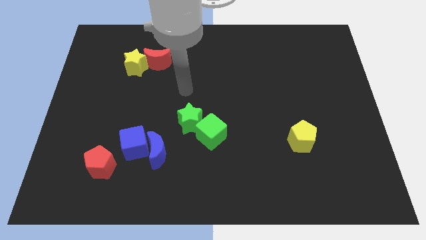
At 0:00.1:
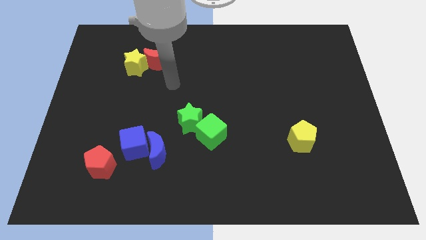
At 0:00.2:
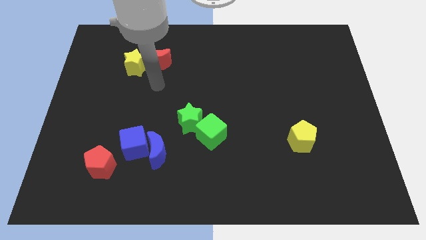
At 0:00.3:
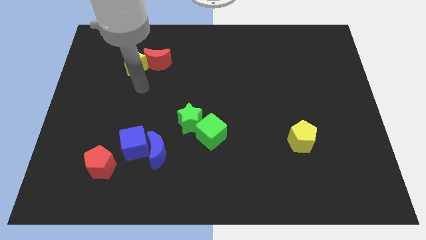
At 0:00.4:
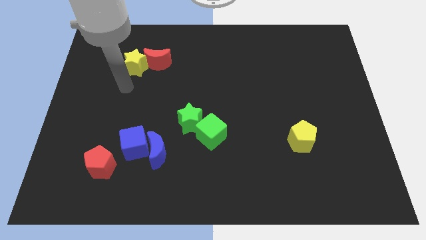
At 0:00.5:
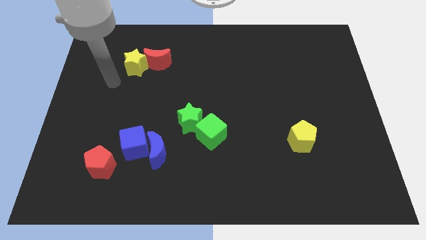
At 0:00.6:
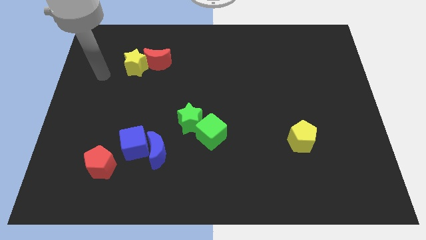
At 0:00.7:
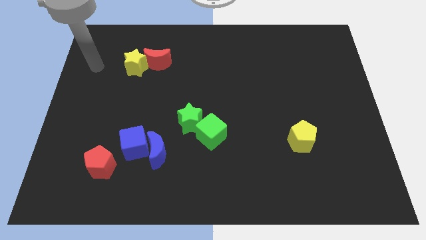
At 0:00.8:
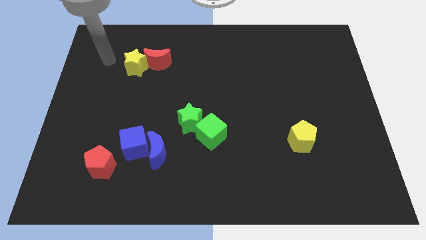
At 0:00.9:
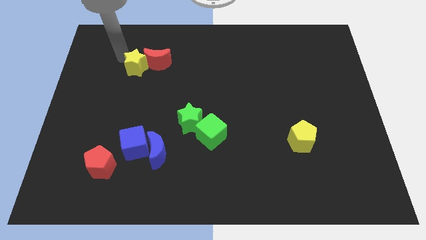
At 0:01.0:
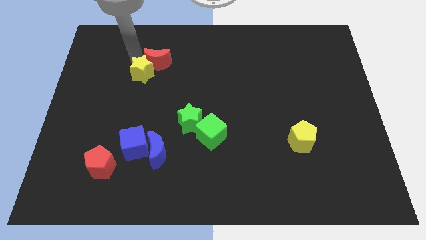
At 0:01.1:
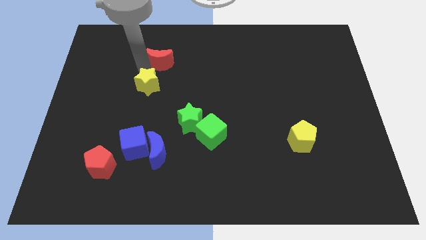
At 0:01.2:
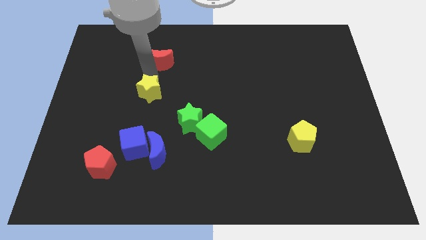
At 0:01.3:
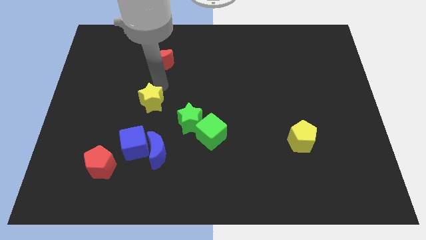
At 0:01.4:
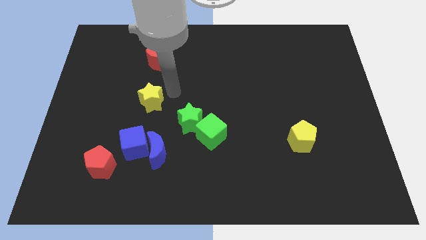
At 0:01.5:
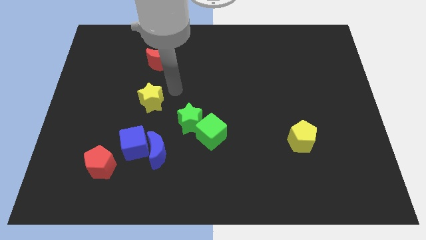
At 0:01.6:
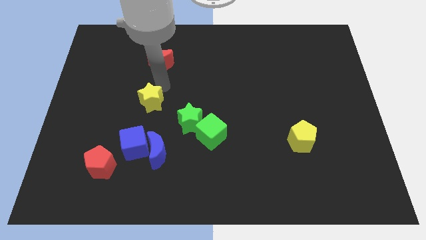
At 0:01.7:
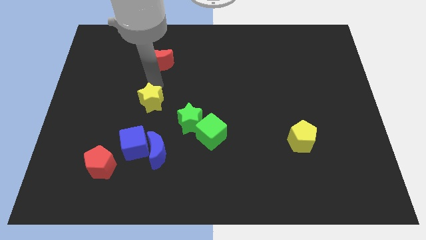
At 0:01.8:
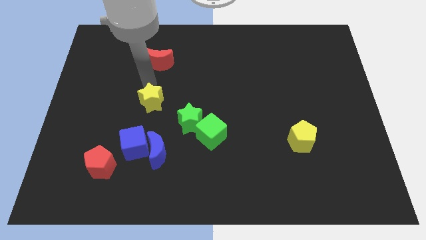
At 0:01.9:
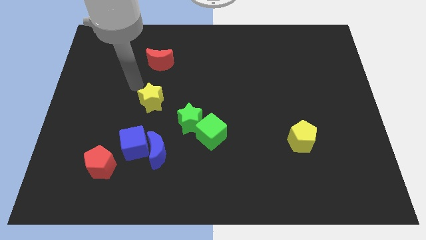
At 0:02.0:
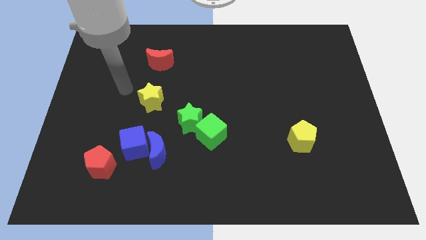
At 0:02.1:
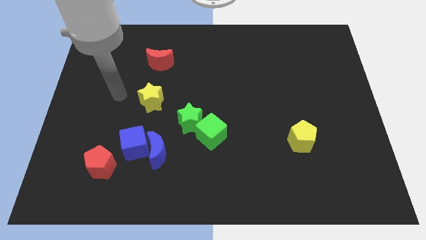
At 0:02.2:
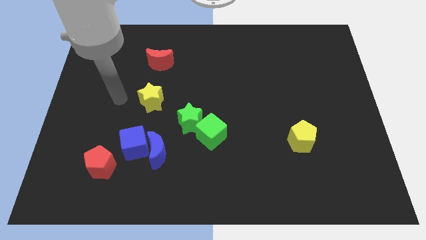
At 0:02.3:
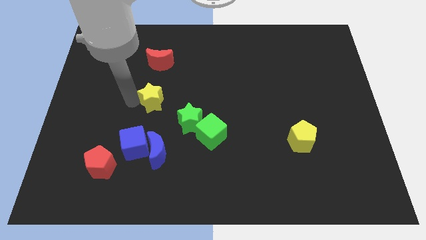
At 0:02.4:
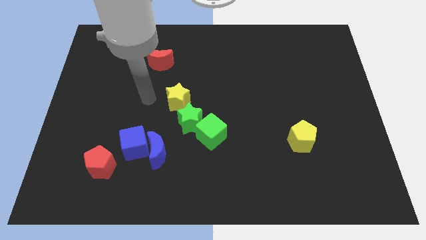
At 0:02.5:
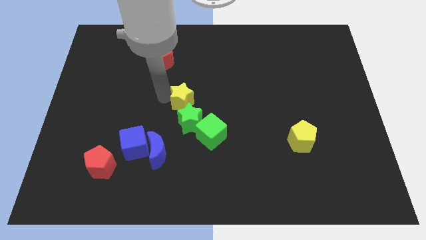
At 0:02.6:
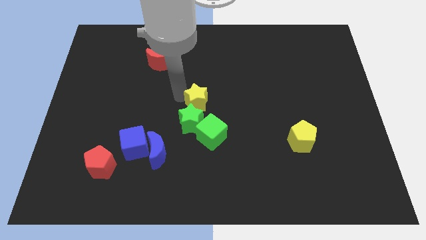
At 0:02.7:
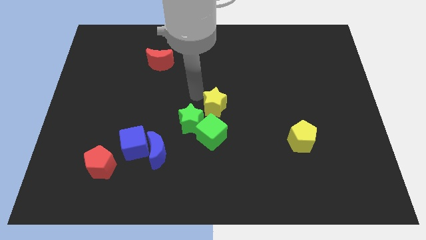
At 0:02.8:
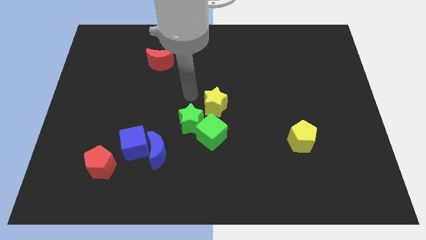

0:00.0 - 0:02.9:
push yellow star above green cube

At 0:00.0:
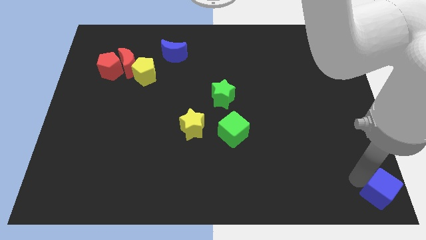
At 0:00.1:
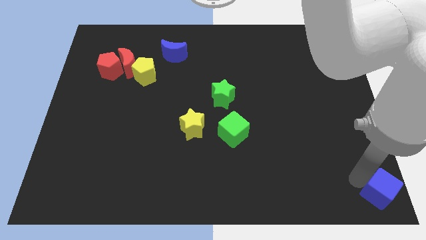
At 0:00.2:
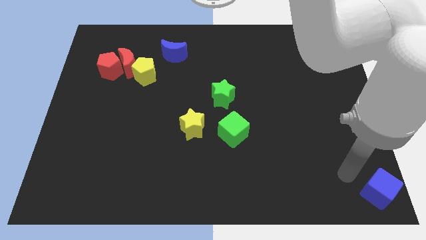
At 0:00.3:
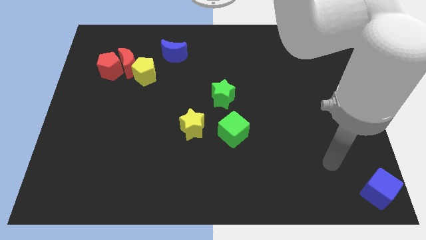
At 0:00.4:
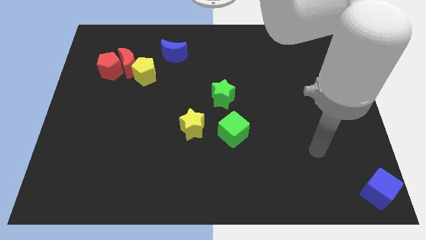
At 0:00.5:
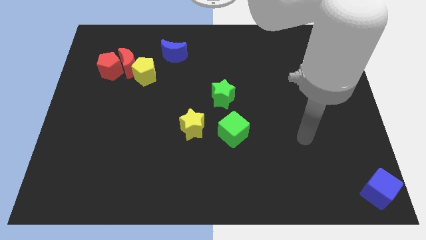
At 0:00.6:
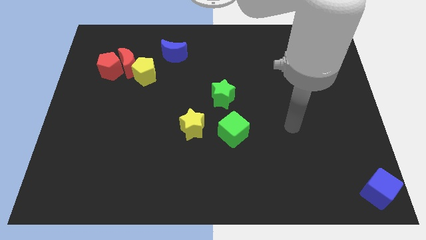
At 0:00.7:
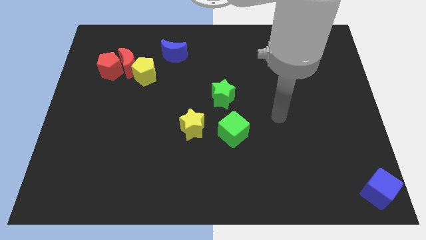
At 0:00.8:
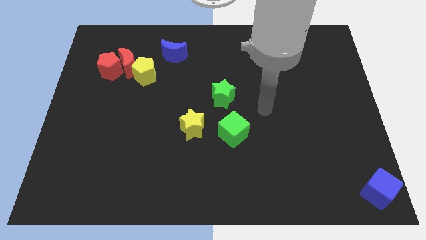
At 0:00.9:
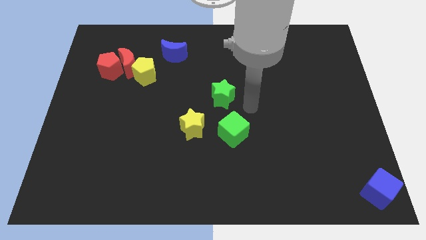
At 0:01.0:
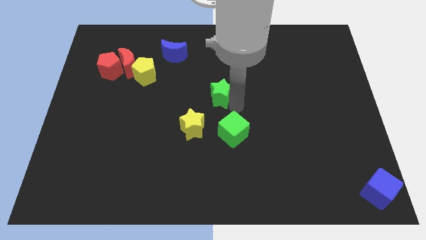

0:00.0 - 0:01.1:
move your arm towards the green star

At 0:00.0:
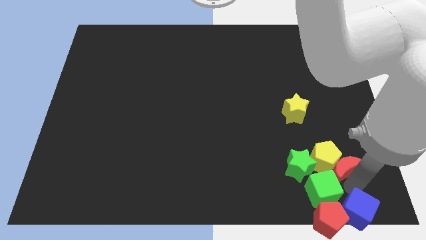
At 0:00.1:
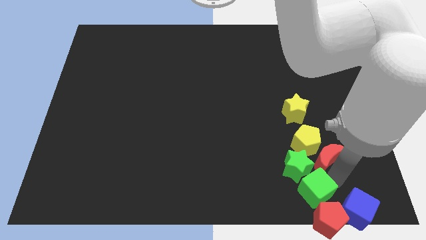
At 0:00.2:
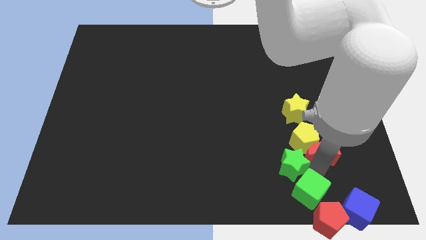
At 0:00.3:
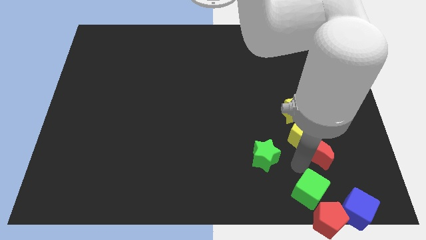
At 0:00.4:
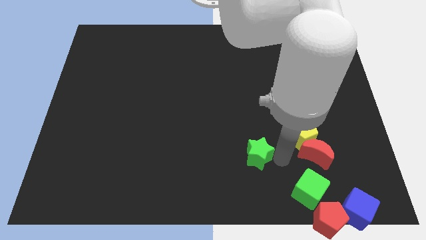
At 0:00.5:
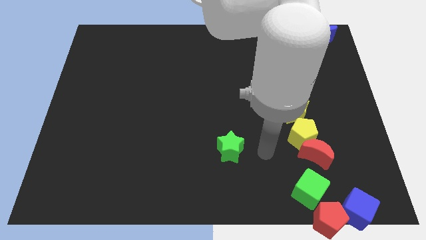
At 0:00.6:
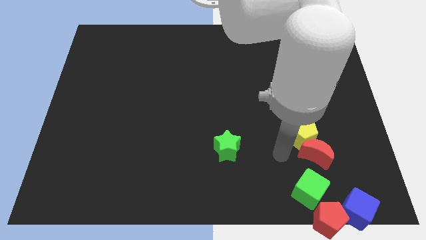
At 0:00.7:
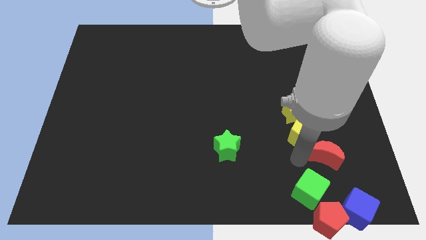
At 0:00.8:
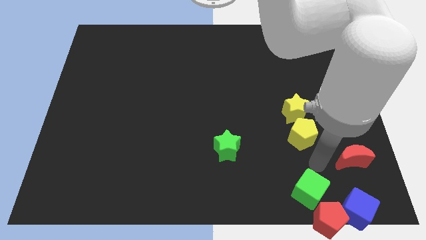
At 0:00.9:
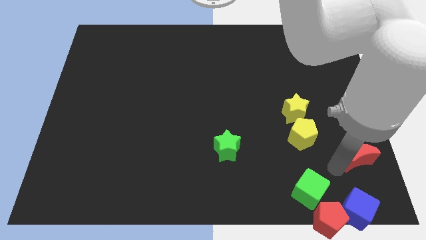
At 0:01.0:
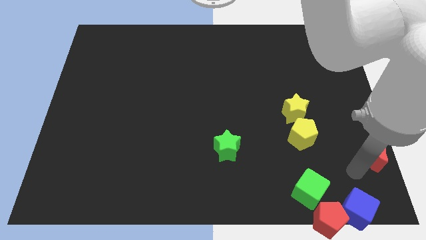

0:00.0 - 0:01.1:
move the green star away from the yellow pentagon

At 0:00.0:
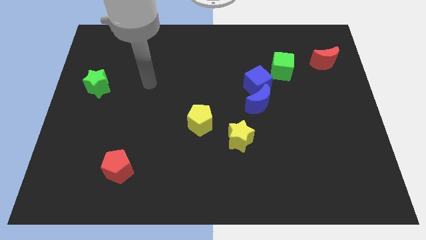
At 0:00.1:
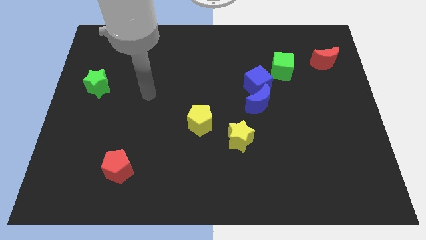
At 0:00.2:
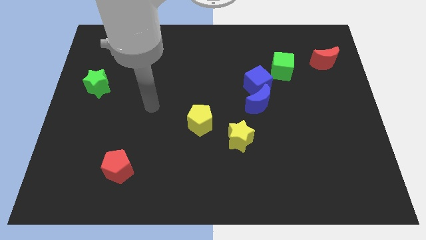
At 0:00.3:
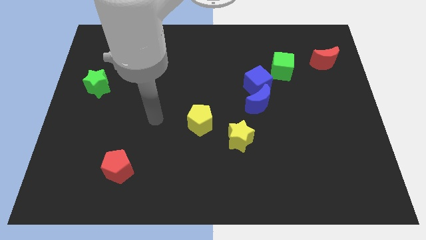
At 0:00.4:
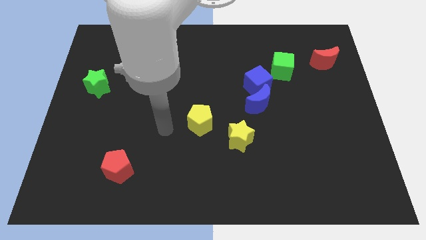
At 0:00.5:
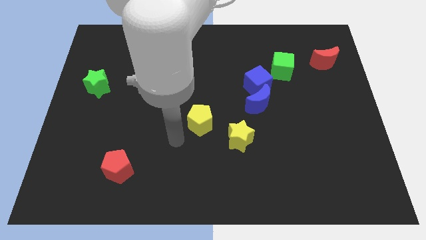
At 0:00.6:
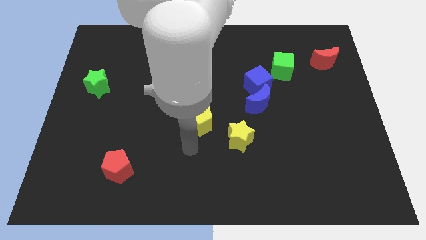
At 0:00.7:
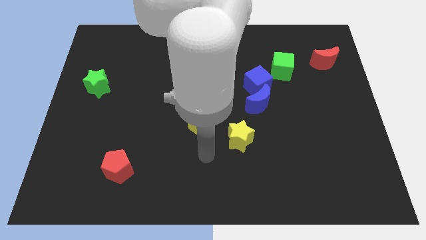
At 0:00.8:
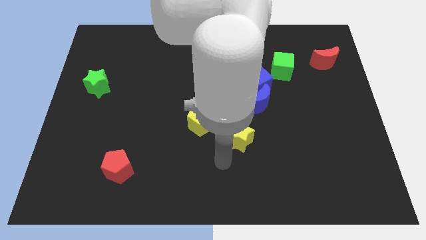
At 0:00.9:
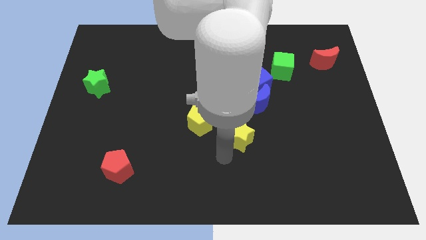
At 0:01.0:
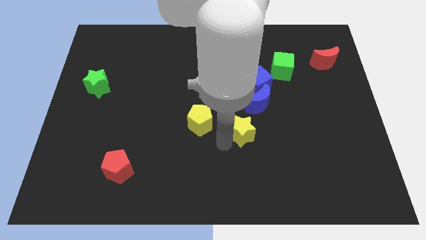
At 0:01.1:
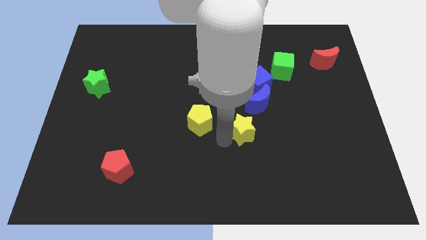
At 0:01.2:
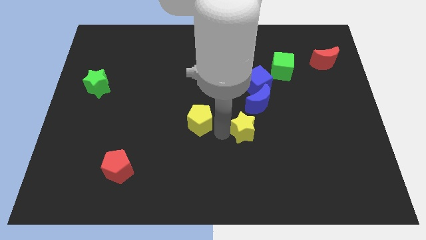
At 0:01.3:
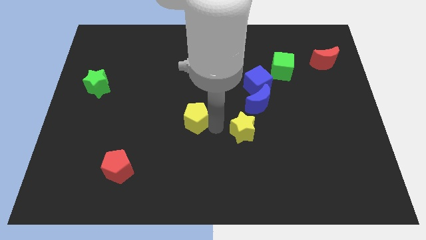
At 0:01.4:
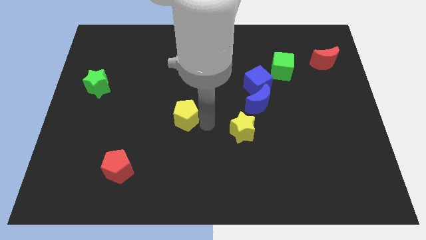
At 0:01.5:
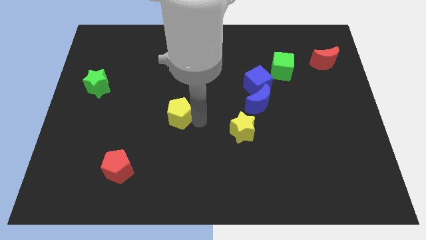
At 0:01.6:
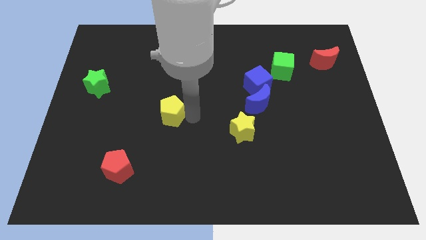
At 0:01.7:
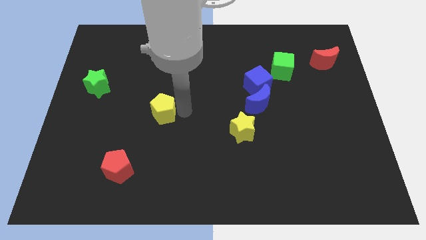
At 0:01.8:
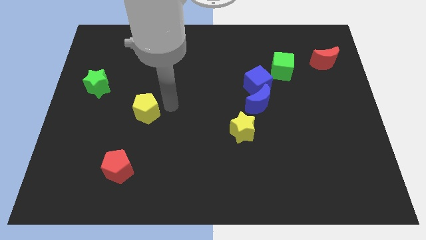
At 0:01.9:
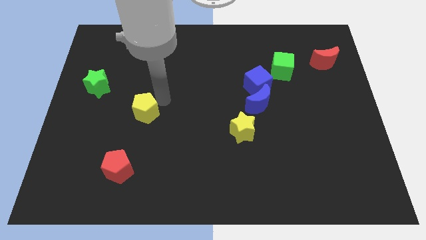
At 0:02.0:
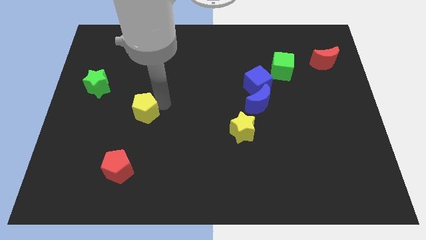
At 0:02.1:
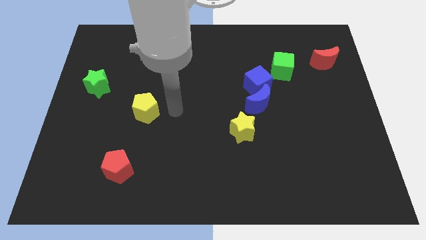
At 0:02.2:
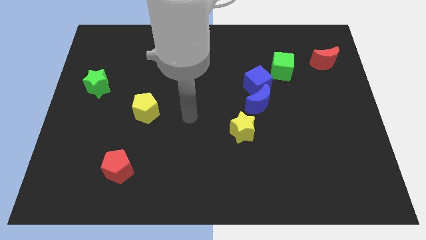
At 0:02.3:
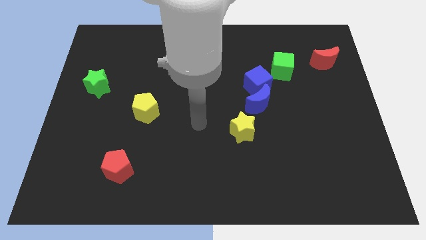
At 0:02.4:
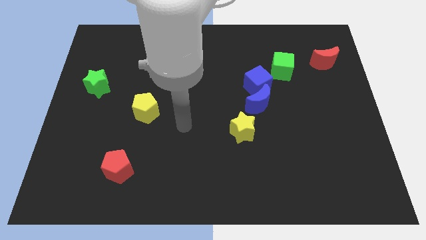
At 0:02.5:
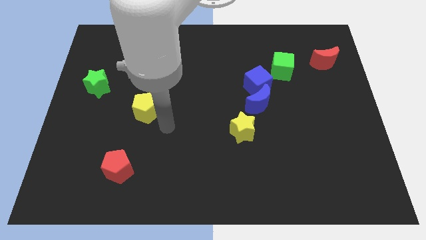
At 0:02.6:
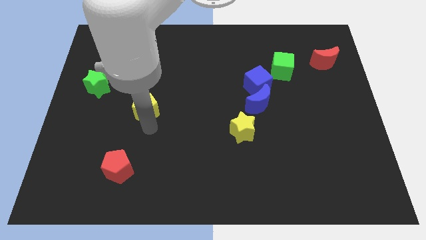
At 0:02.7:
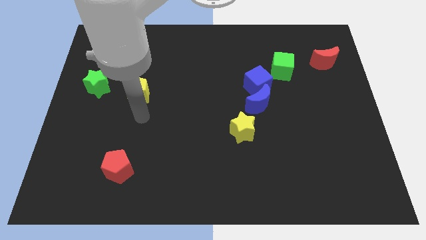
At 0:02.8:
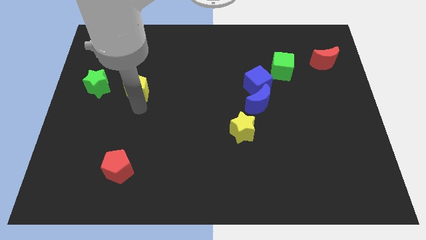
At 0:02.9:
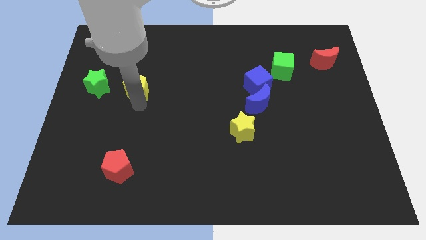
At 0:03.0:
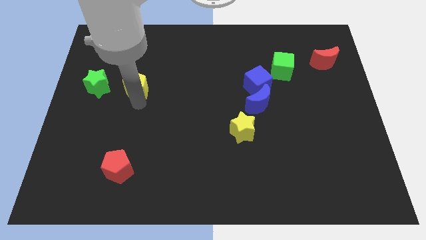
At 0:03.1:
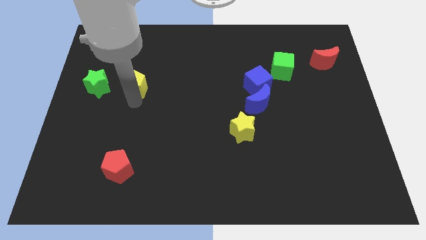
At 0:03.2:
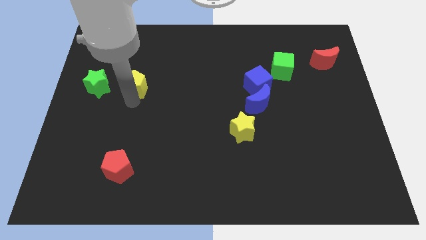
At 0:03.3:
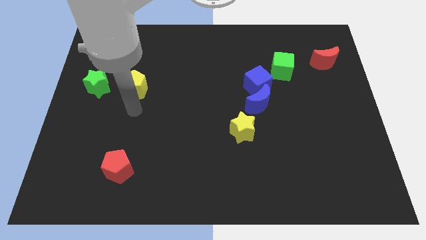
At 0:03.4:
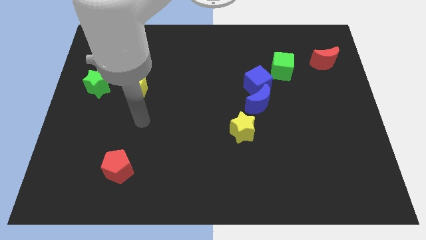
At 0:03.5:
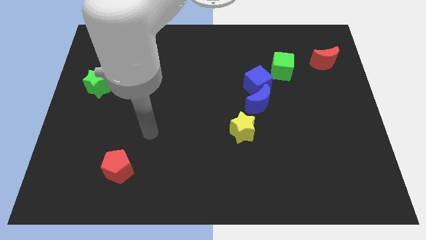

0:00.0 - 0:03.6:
place yellow pentagon on the right side of the green star

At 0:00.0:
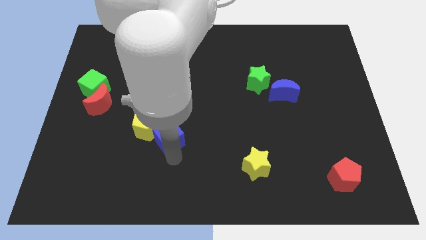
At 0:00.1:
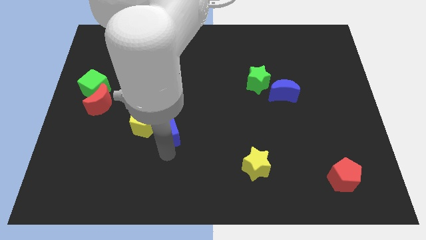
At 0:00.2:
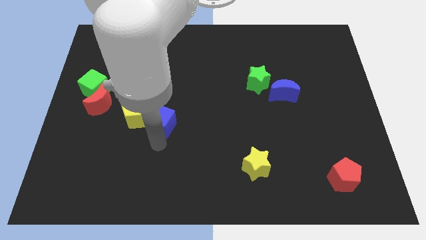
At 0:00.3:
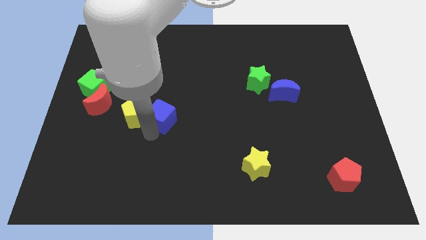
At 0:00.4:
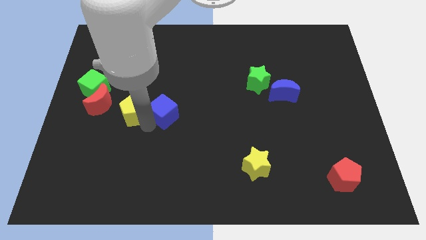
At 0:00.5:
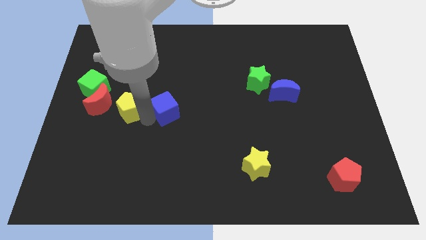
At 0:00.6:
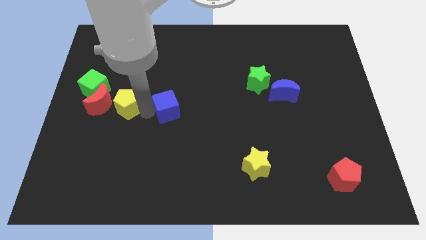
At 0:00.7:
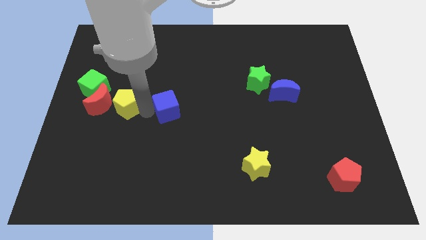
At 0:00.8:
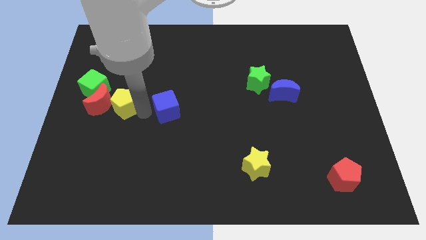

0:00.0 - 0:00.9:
point your arm between yellow pentagon and blue cube
